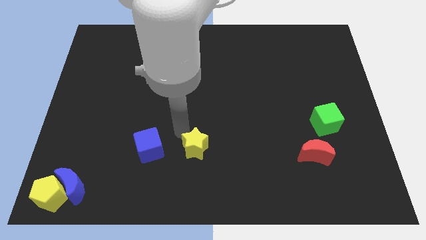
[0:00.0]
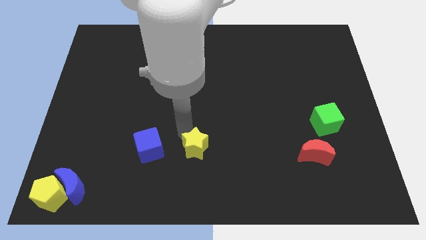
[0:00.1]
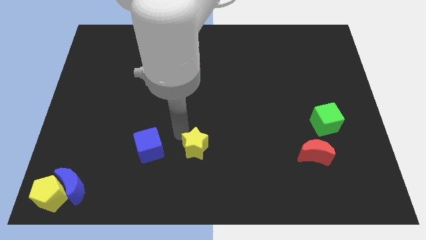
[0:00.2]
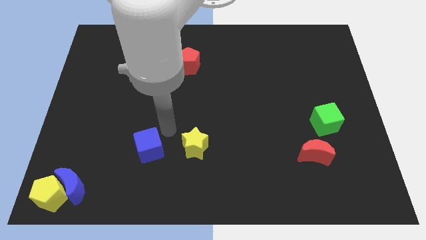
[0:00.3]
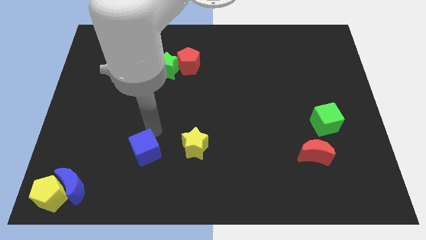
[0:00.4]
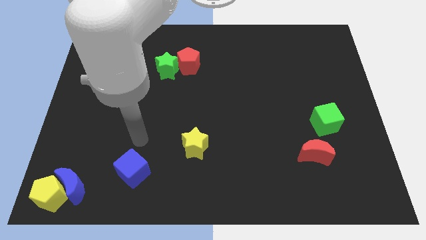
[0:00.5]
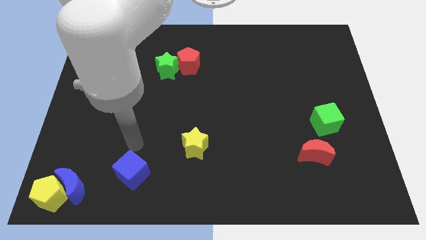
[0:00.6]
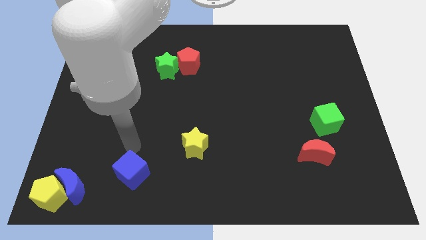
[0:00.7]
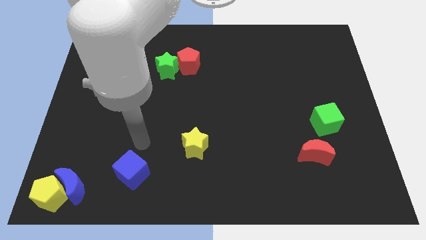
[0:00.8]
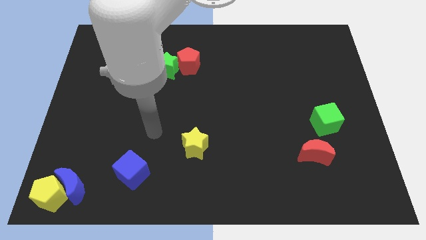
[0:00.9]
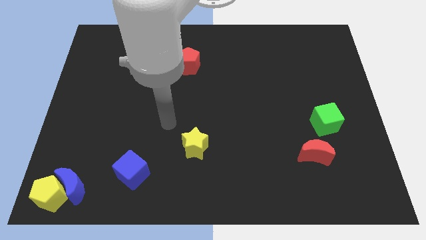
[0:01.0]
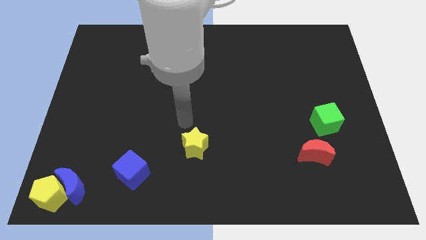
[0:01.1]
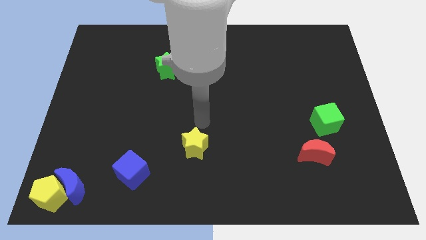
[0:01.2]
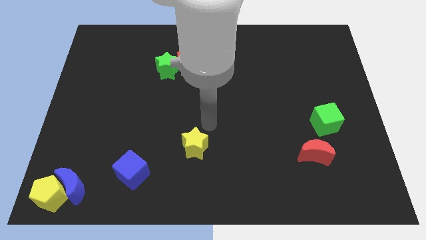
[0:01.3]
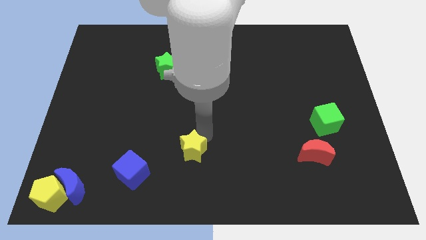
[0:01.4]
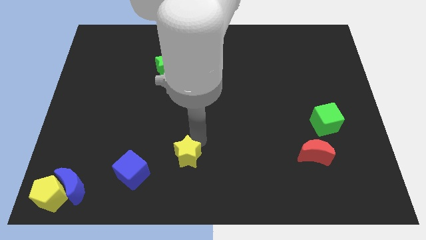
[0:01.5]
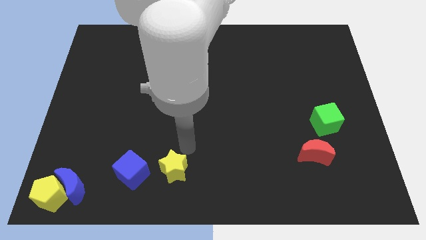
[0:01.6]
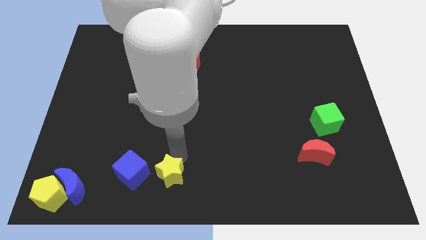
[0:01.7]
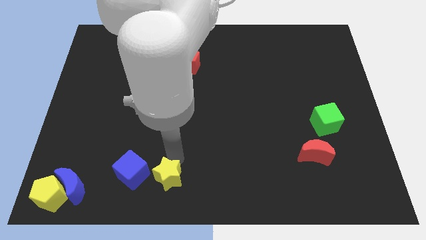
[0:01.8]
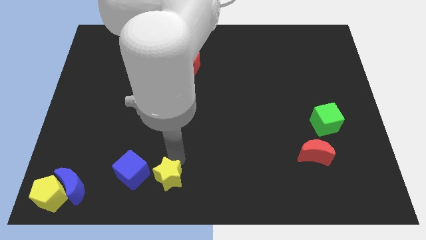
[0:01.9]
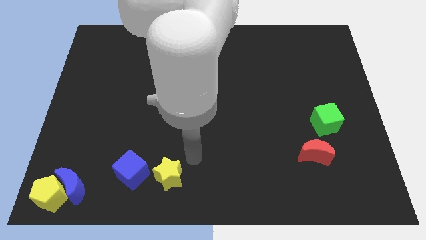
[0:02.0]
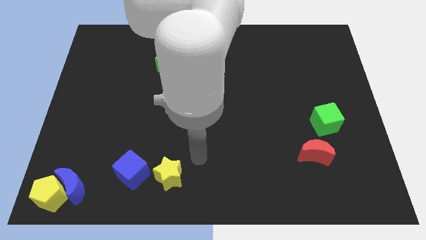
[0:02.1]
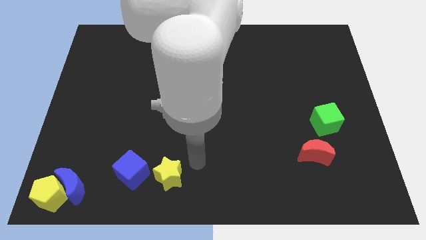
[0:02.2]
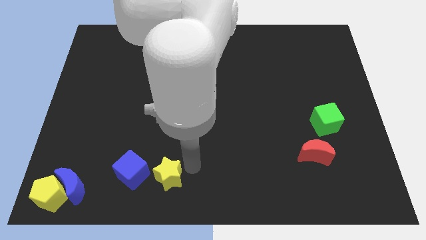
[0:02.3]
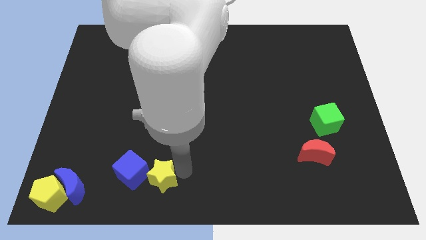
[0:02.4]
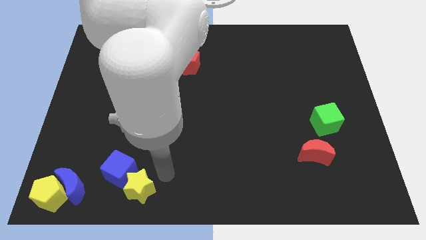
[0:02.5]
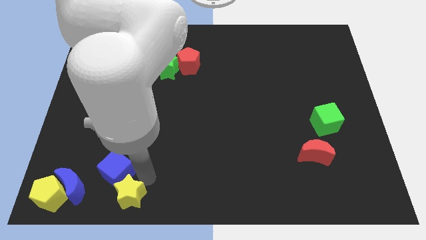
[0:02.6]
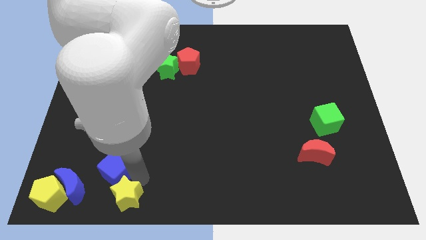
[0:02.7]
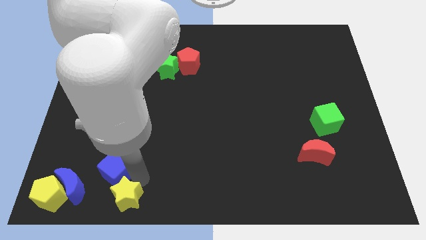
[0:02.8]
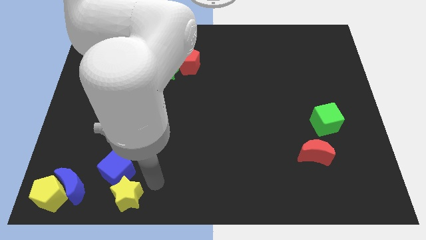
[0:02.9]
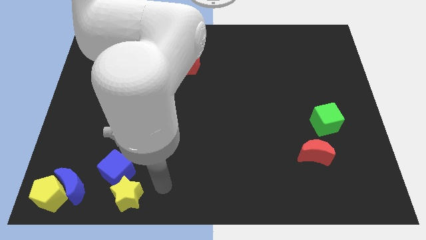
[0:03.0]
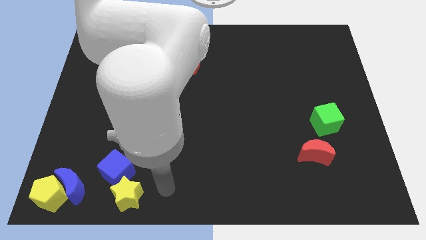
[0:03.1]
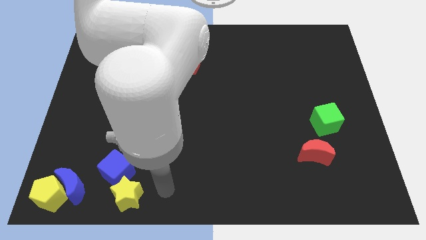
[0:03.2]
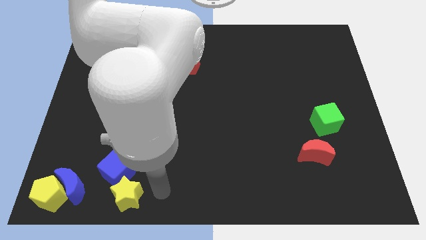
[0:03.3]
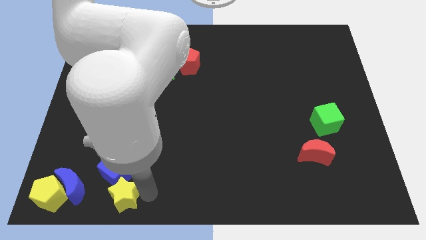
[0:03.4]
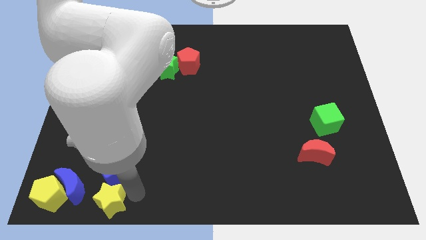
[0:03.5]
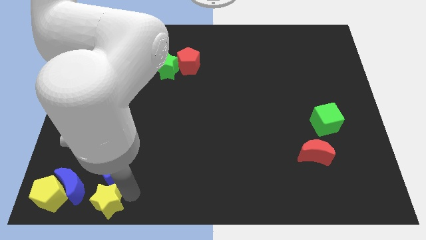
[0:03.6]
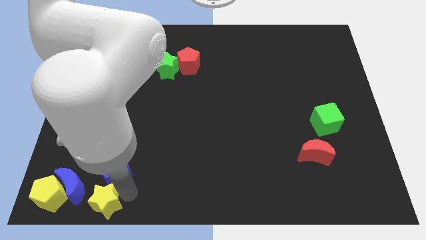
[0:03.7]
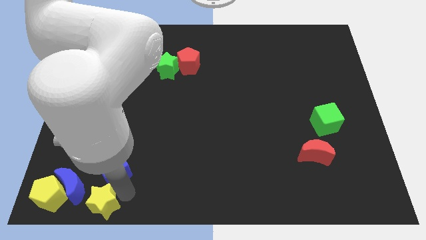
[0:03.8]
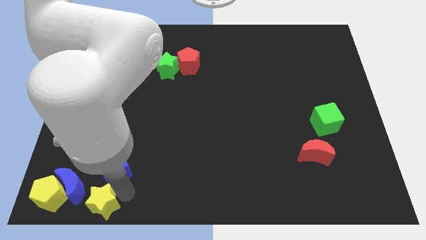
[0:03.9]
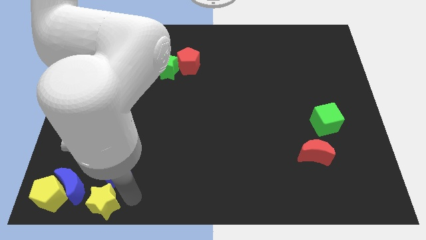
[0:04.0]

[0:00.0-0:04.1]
push yellow star at the bottom left to the right of the blue crescent

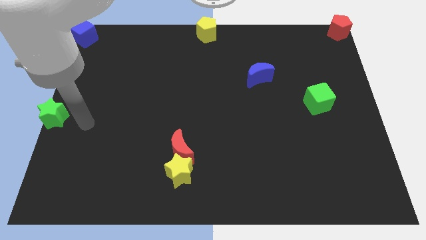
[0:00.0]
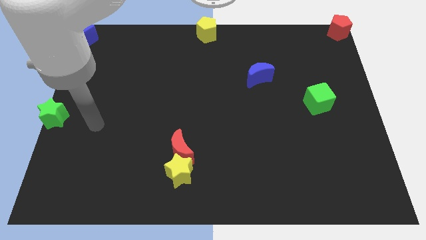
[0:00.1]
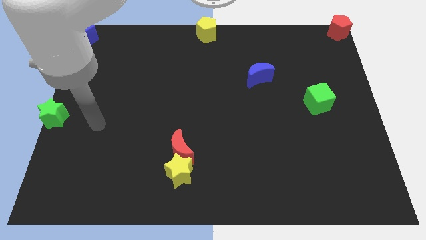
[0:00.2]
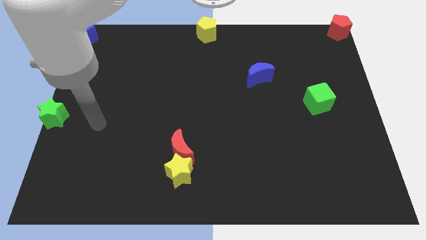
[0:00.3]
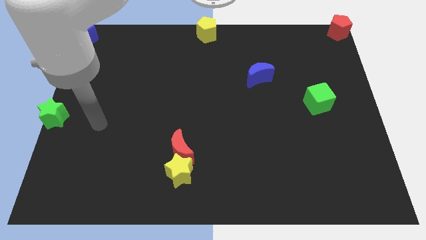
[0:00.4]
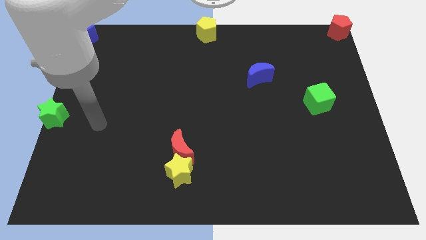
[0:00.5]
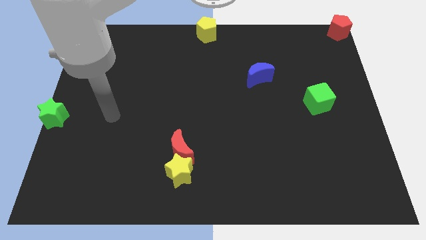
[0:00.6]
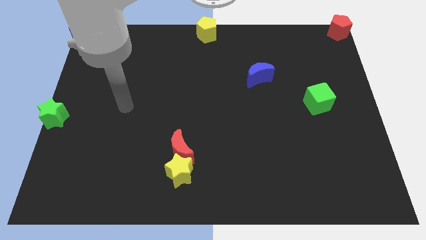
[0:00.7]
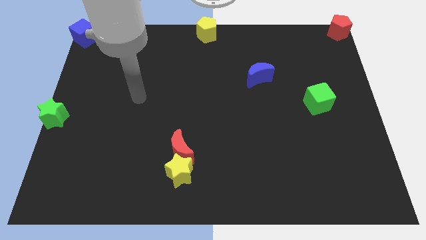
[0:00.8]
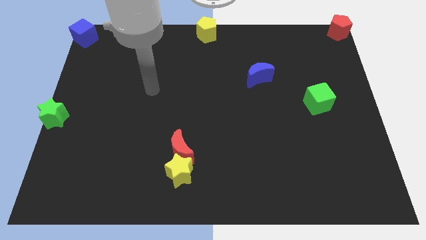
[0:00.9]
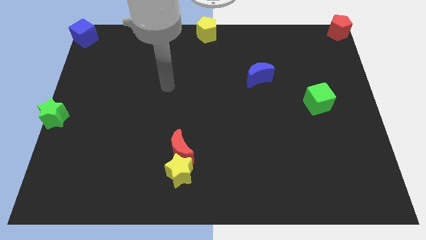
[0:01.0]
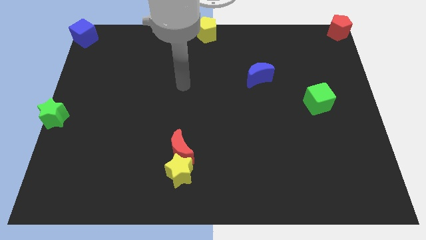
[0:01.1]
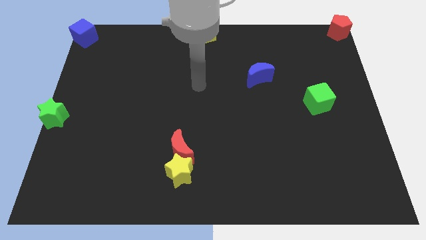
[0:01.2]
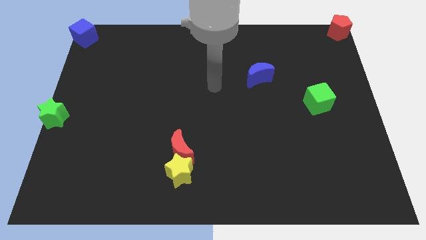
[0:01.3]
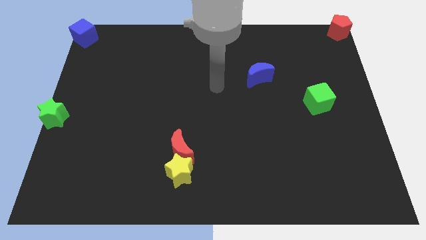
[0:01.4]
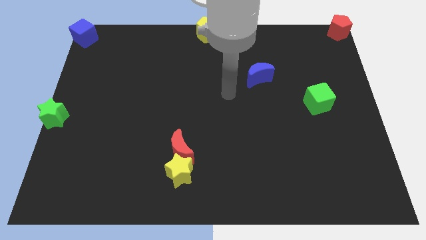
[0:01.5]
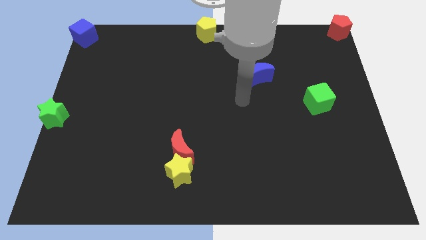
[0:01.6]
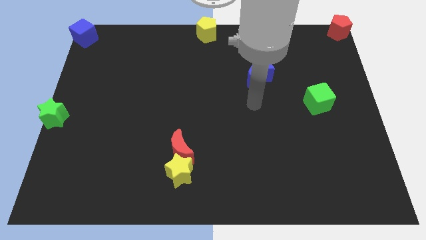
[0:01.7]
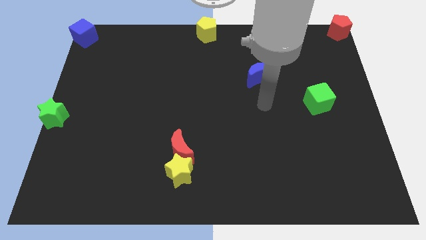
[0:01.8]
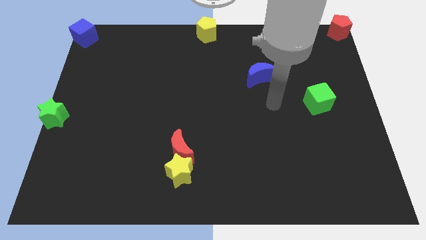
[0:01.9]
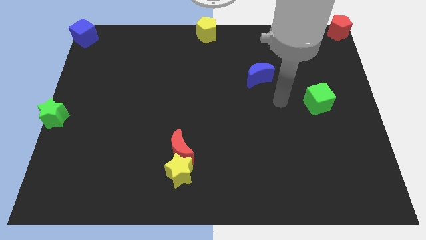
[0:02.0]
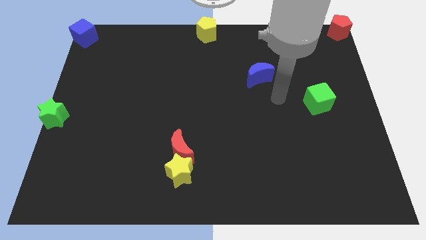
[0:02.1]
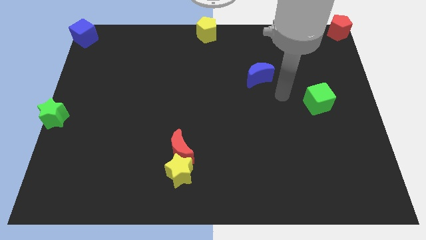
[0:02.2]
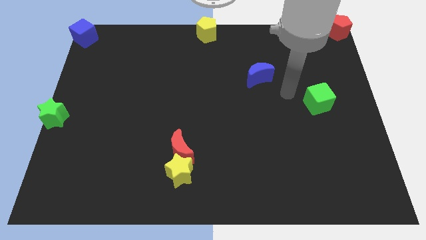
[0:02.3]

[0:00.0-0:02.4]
move your arm away from the green star

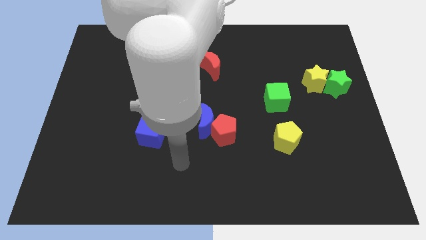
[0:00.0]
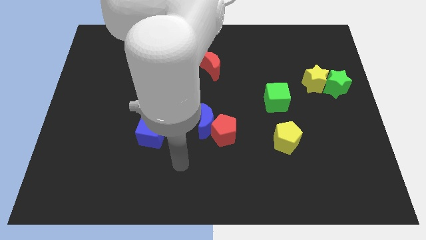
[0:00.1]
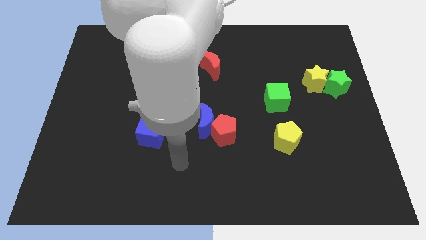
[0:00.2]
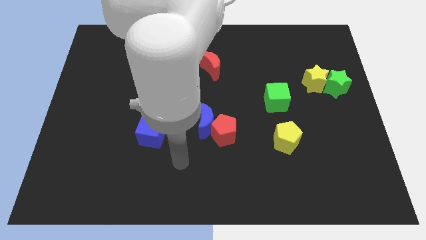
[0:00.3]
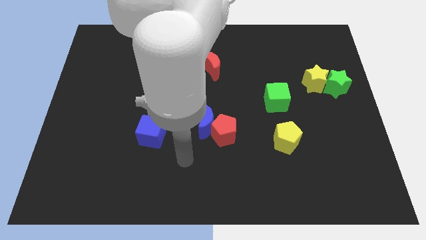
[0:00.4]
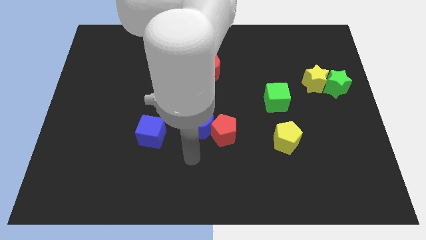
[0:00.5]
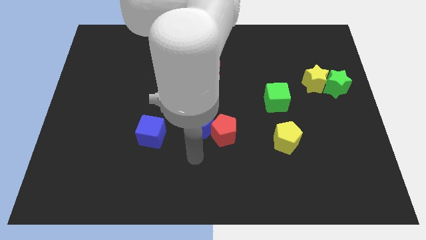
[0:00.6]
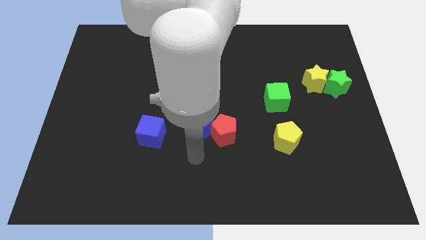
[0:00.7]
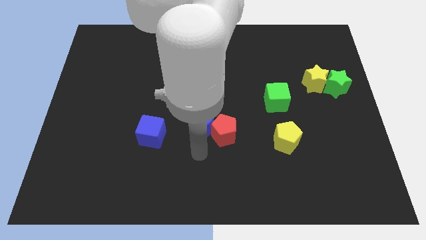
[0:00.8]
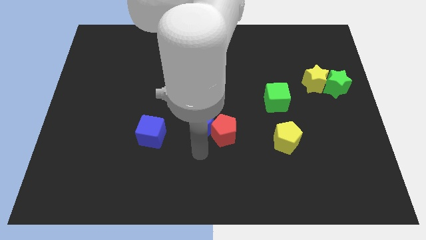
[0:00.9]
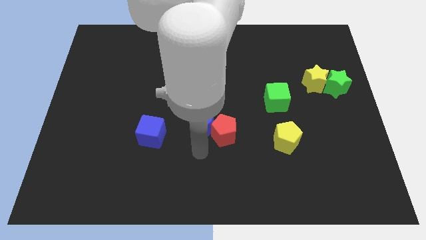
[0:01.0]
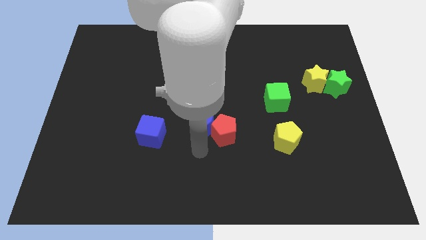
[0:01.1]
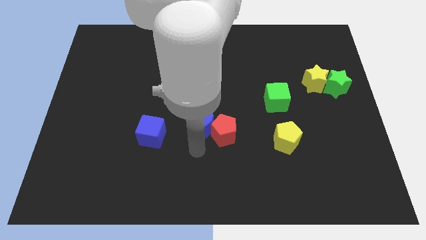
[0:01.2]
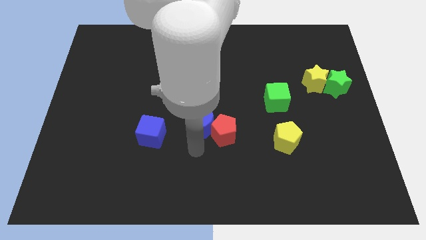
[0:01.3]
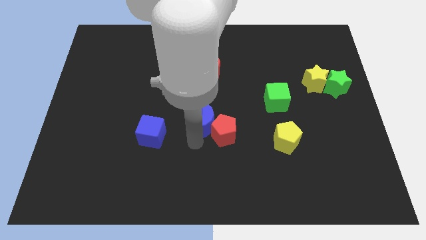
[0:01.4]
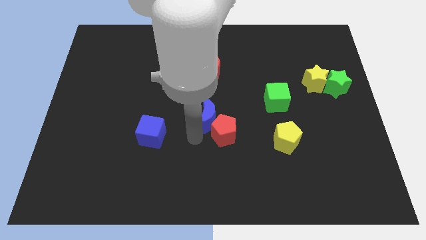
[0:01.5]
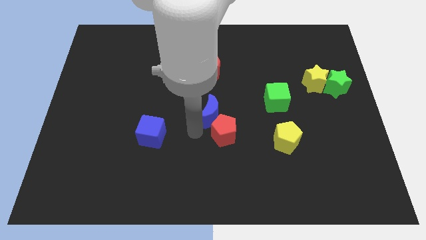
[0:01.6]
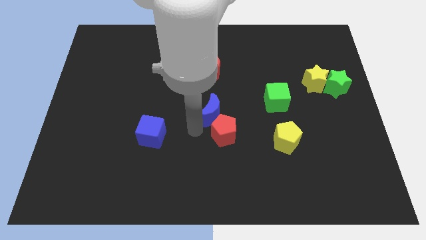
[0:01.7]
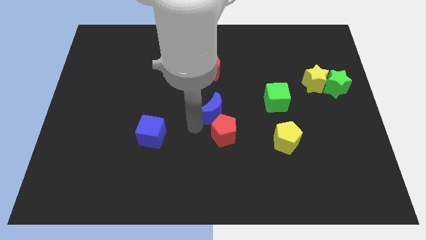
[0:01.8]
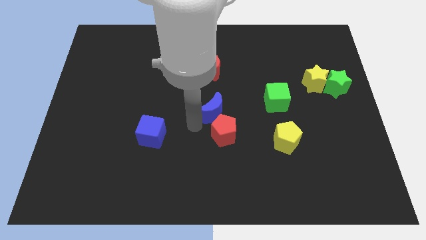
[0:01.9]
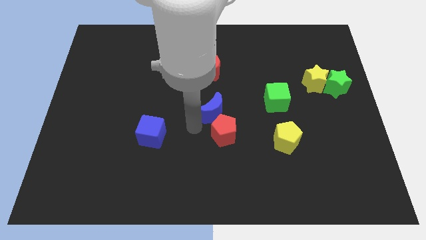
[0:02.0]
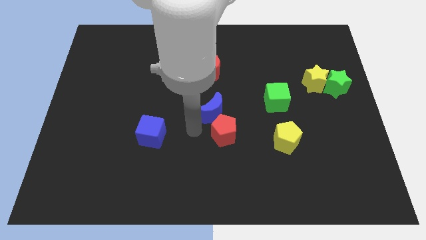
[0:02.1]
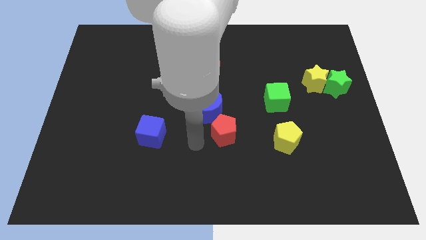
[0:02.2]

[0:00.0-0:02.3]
place blue crescent above the red pentagon

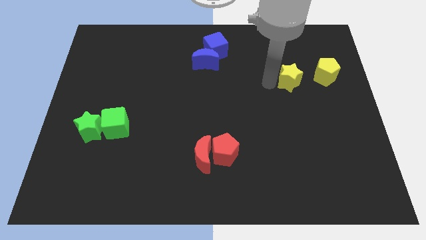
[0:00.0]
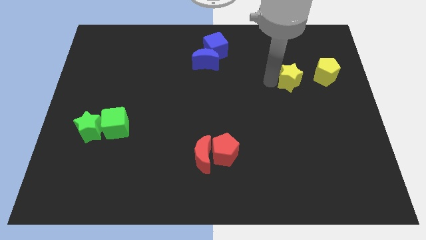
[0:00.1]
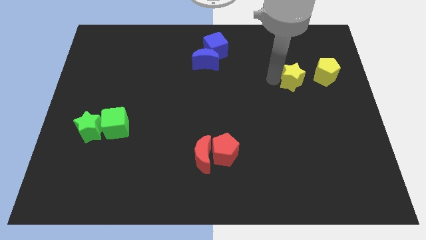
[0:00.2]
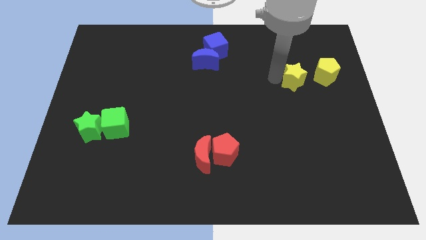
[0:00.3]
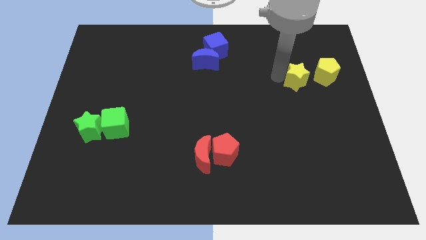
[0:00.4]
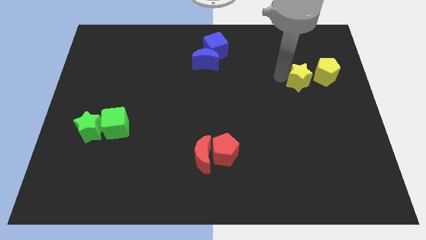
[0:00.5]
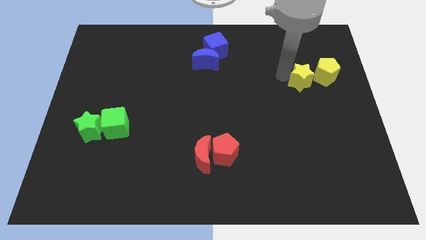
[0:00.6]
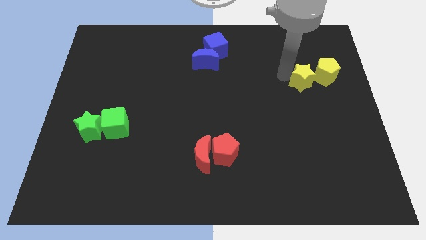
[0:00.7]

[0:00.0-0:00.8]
push the yellow star to the left of the yellow pentagon
